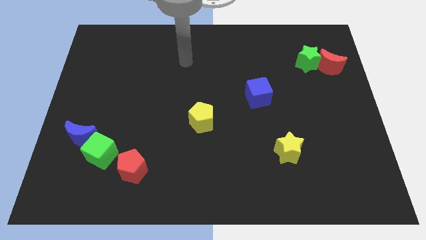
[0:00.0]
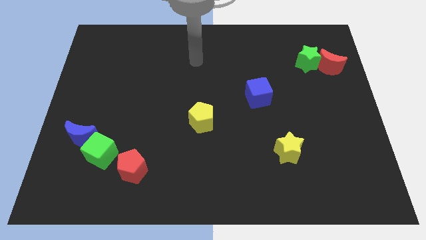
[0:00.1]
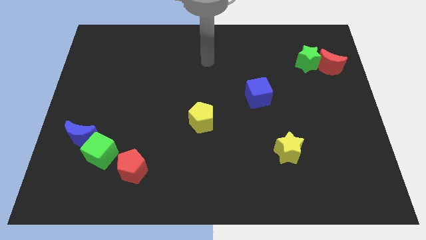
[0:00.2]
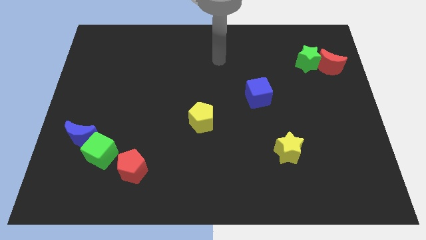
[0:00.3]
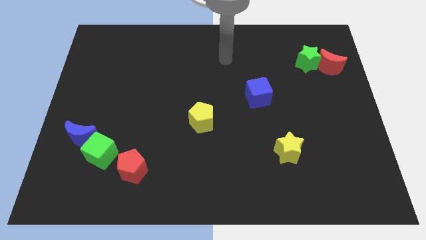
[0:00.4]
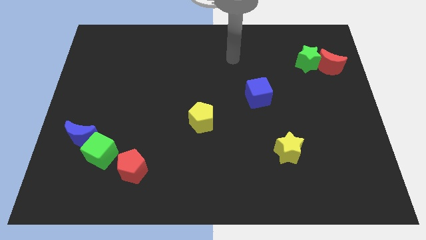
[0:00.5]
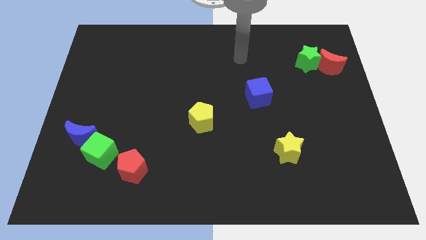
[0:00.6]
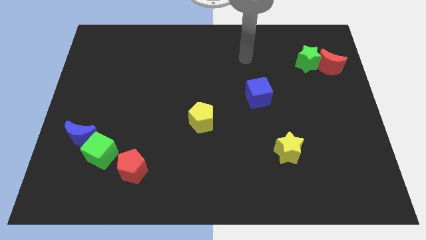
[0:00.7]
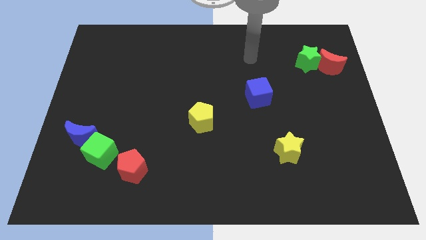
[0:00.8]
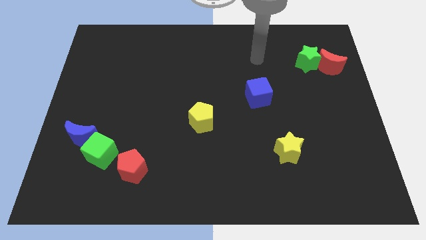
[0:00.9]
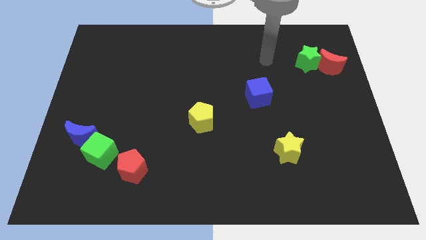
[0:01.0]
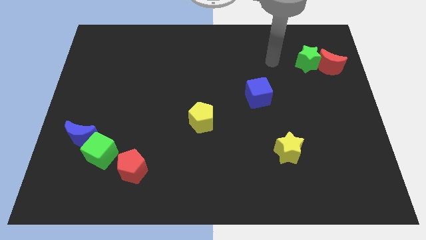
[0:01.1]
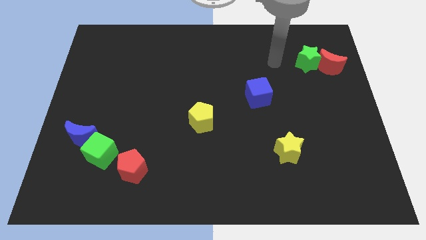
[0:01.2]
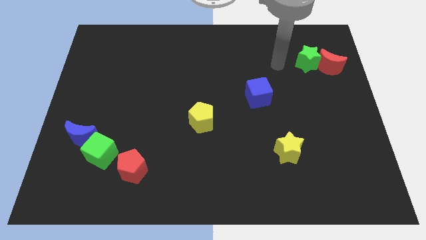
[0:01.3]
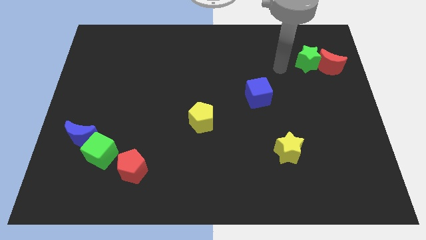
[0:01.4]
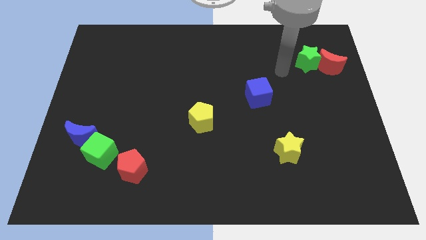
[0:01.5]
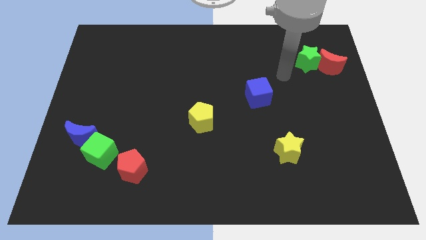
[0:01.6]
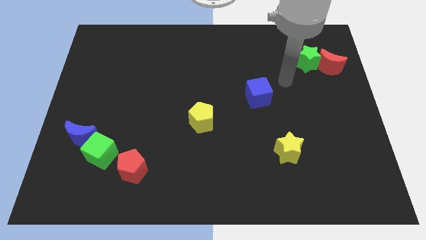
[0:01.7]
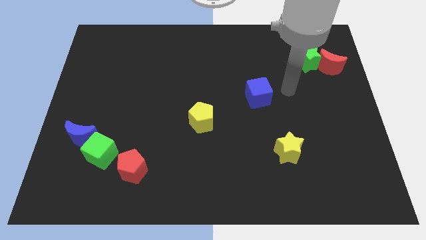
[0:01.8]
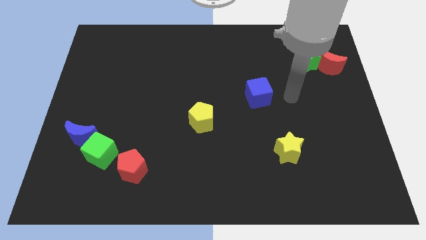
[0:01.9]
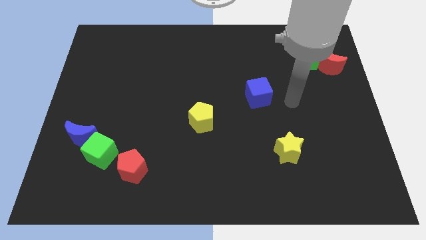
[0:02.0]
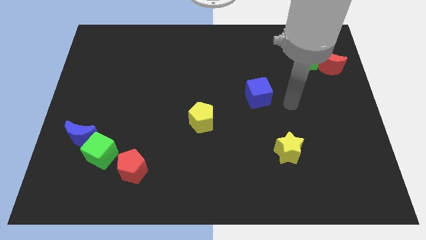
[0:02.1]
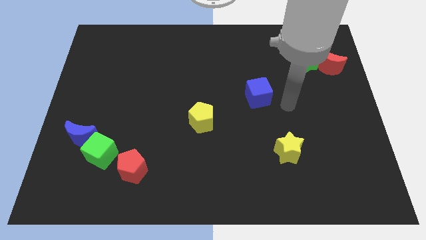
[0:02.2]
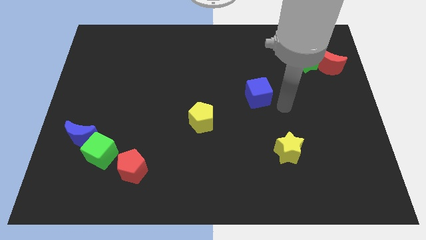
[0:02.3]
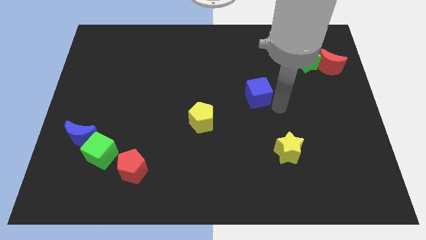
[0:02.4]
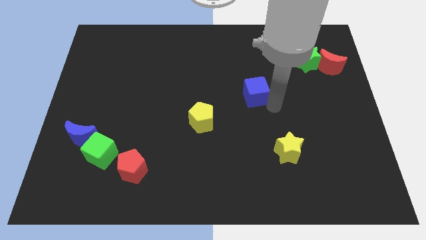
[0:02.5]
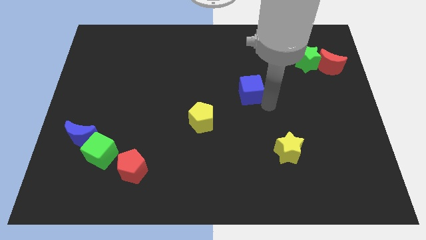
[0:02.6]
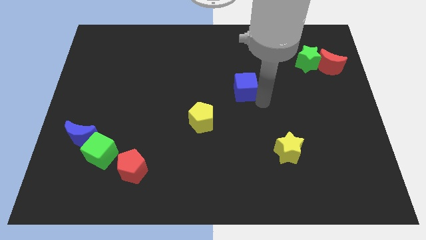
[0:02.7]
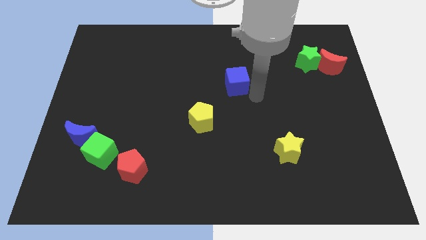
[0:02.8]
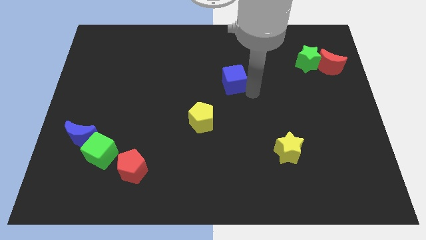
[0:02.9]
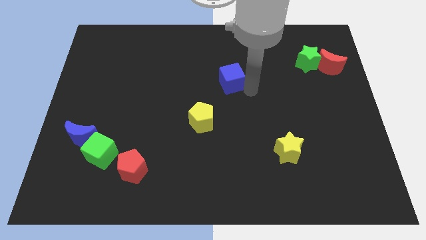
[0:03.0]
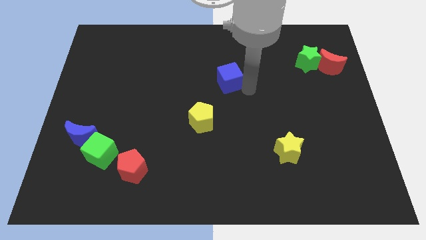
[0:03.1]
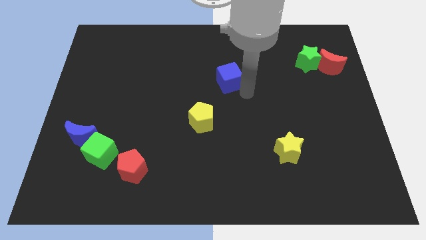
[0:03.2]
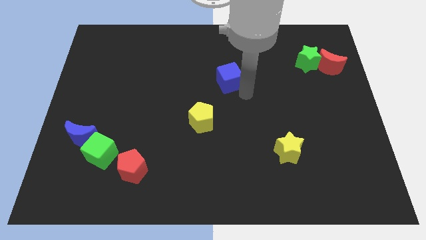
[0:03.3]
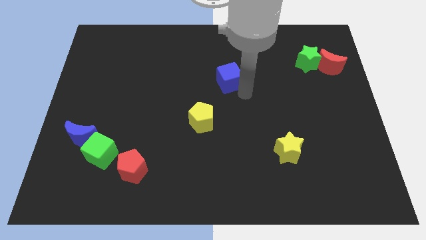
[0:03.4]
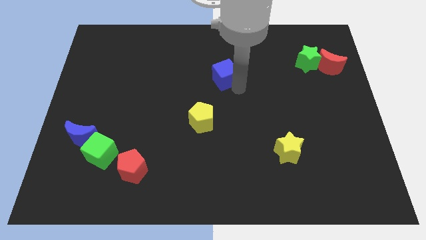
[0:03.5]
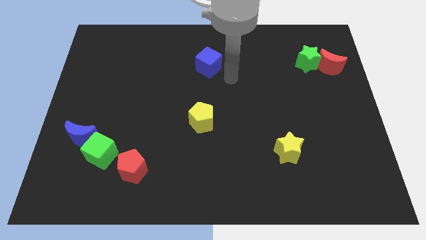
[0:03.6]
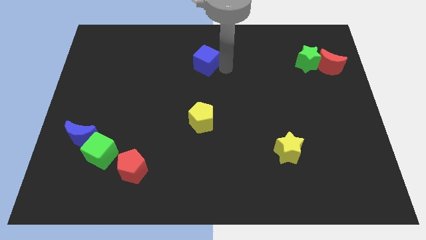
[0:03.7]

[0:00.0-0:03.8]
move your arm towards the blue cube on the top center of the board

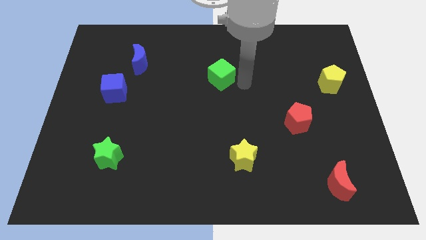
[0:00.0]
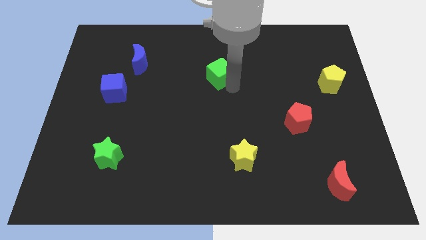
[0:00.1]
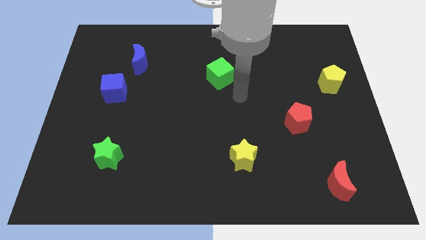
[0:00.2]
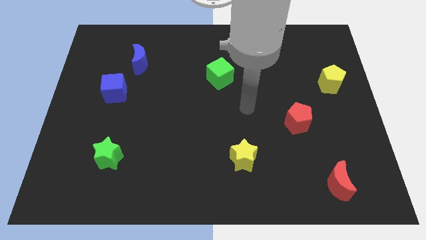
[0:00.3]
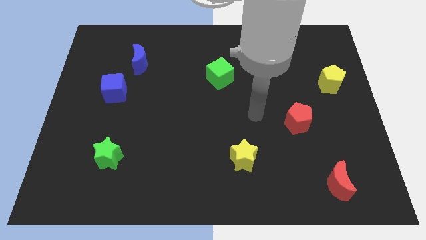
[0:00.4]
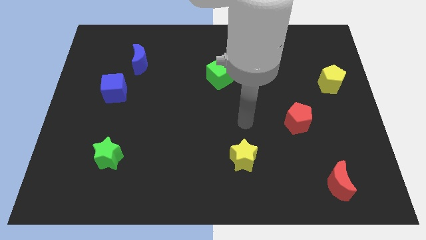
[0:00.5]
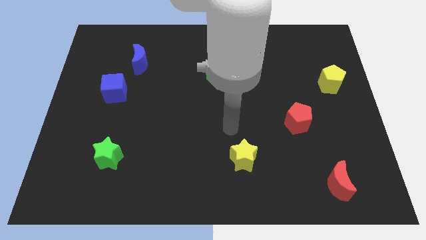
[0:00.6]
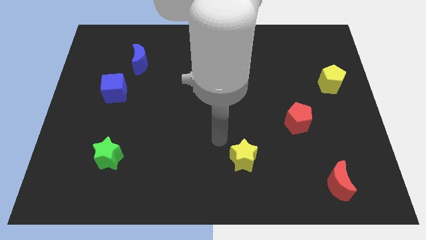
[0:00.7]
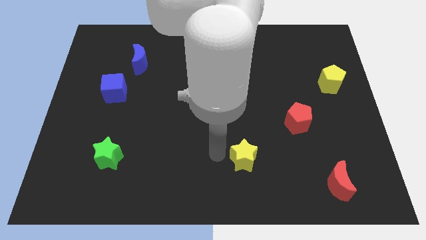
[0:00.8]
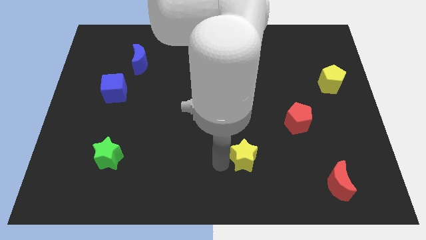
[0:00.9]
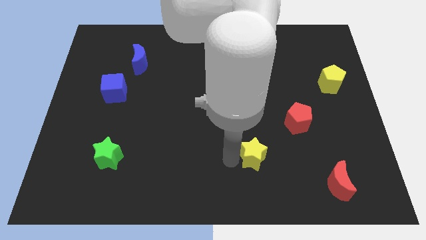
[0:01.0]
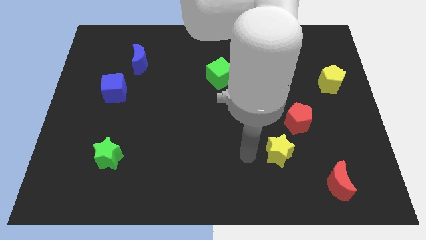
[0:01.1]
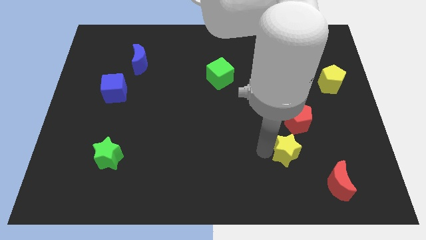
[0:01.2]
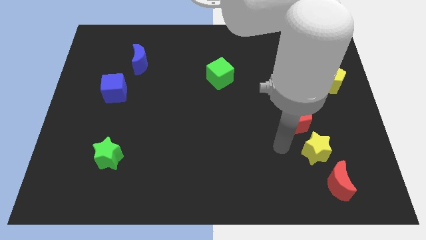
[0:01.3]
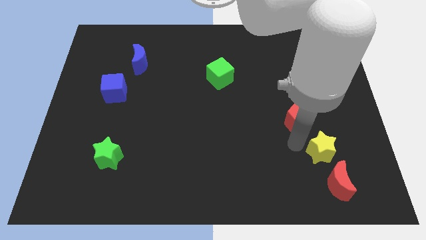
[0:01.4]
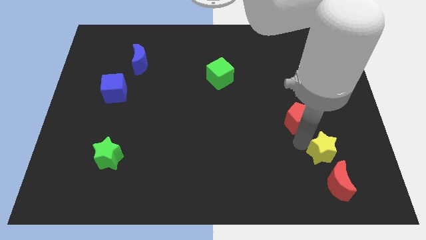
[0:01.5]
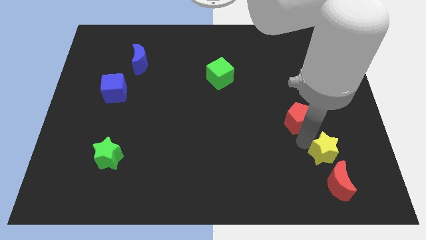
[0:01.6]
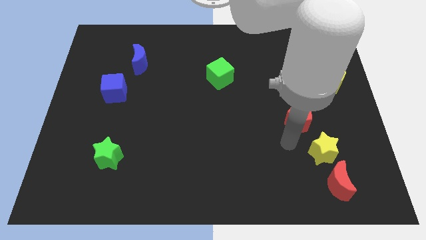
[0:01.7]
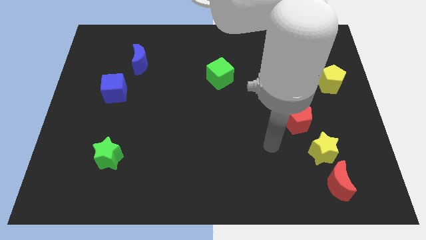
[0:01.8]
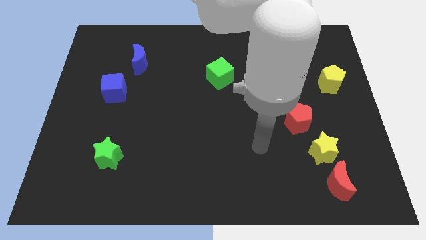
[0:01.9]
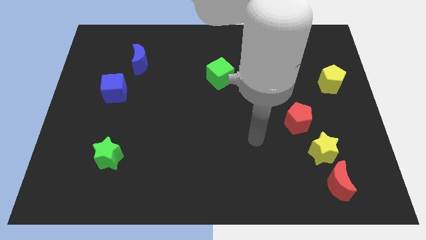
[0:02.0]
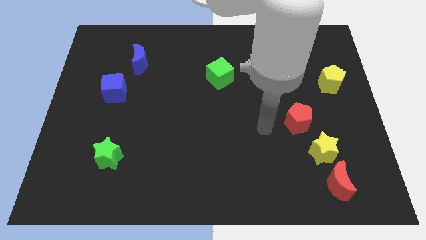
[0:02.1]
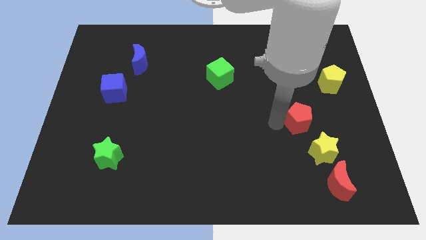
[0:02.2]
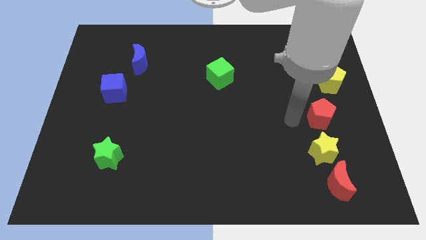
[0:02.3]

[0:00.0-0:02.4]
push the yellow star diagonal in between the two red blocks

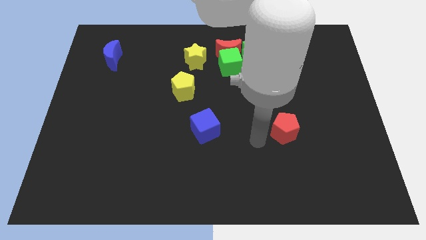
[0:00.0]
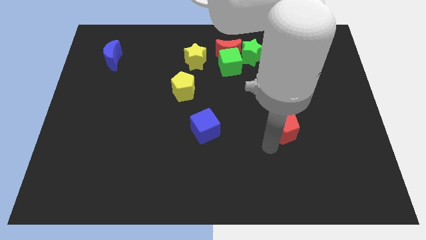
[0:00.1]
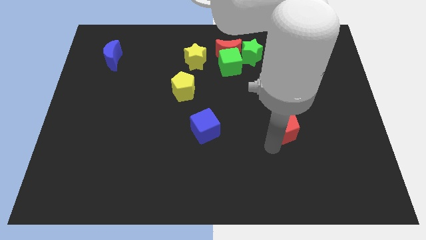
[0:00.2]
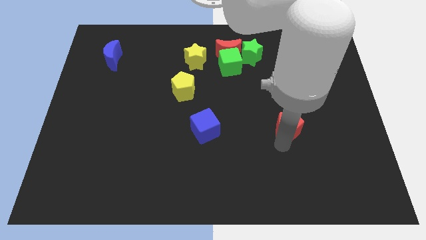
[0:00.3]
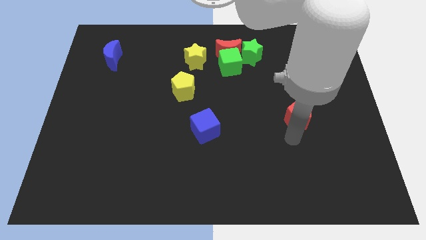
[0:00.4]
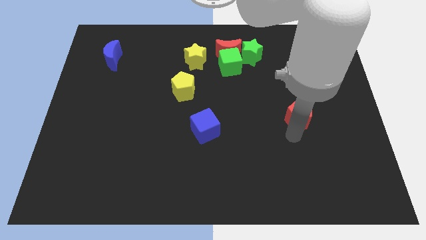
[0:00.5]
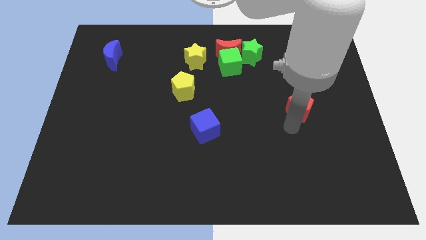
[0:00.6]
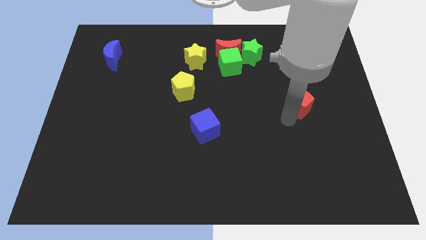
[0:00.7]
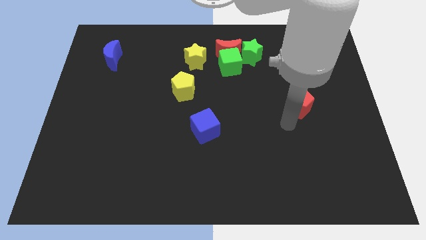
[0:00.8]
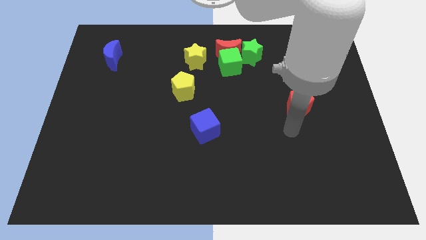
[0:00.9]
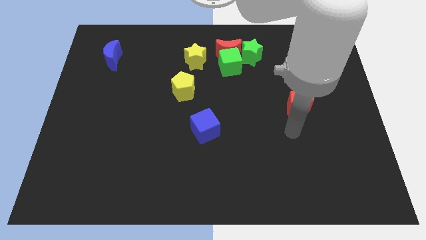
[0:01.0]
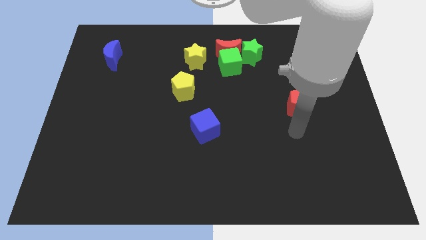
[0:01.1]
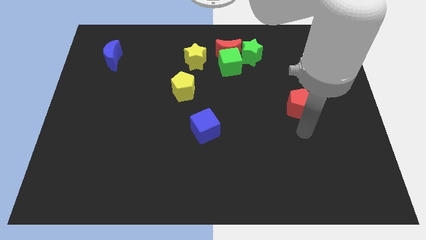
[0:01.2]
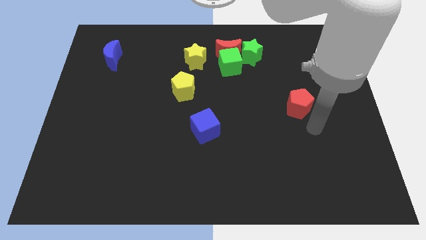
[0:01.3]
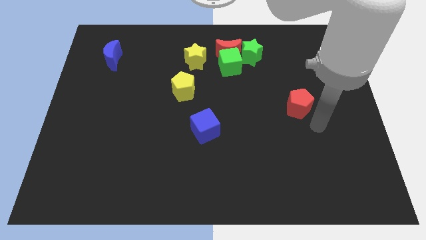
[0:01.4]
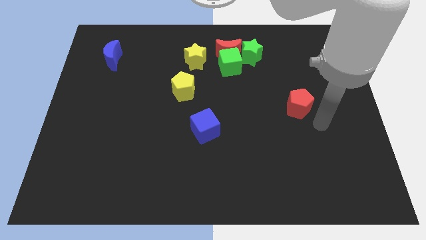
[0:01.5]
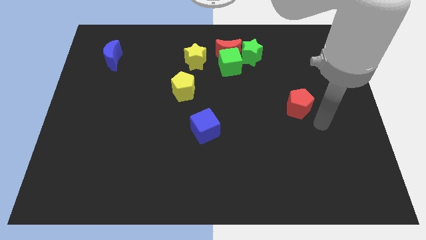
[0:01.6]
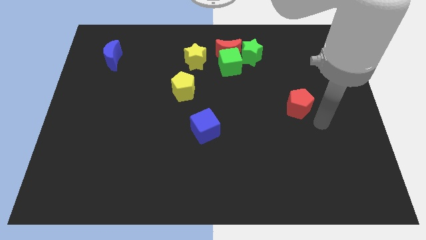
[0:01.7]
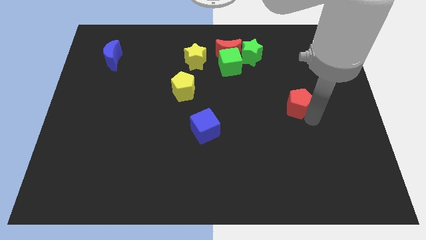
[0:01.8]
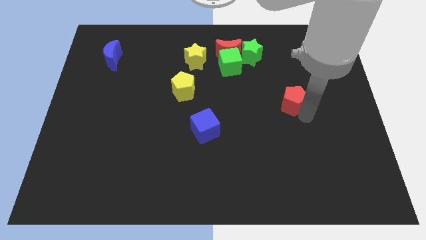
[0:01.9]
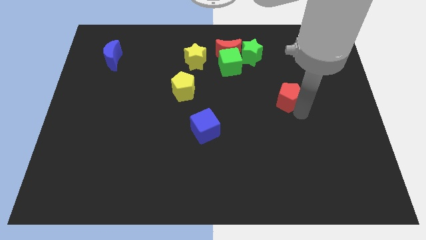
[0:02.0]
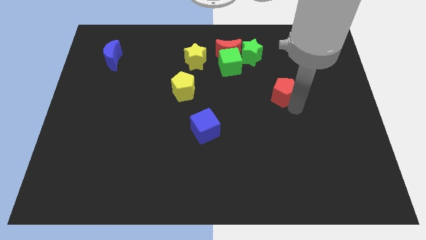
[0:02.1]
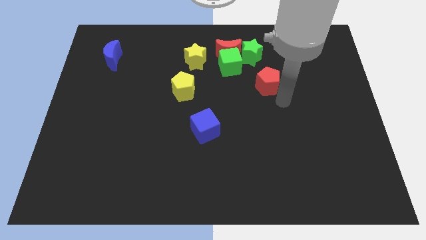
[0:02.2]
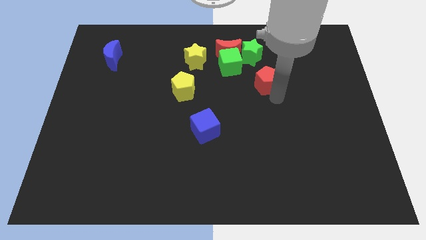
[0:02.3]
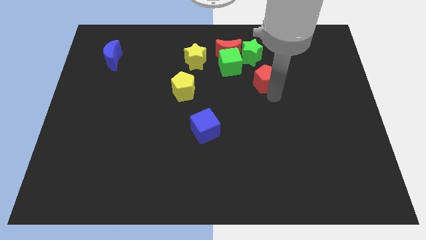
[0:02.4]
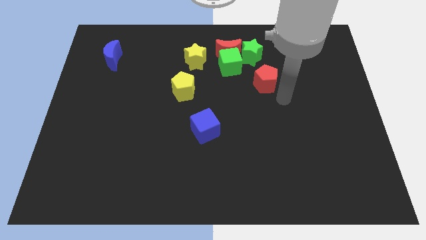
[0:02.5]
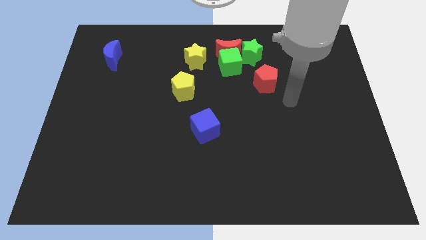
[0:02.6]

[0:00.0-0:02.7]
push the red pentagon below the green star

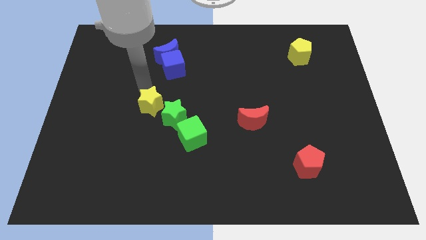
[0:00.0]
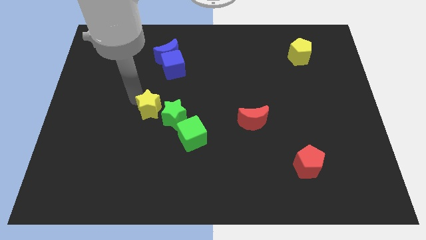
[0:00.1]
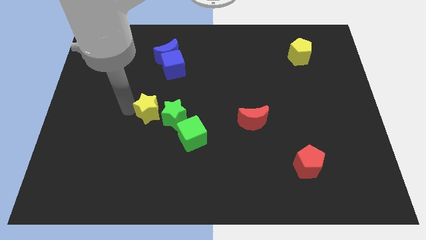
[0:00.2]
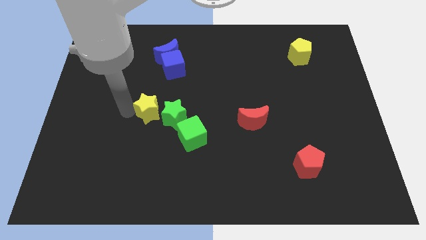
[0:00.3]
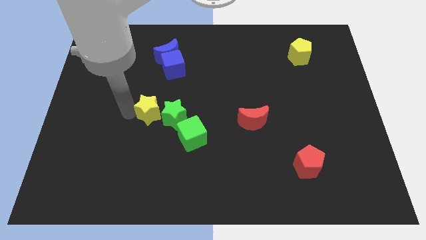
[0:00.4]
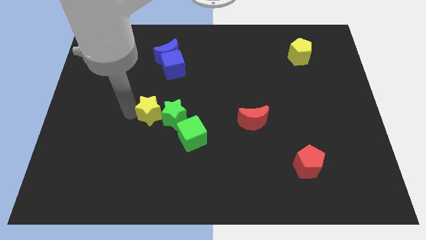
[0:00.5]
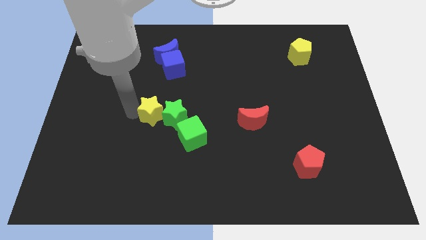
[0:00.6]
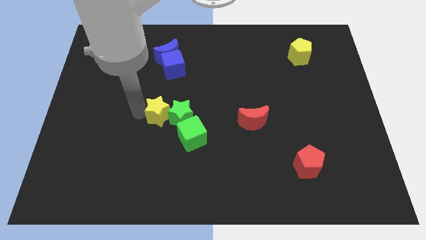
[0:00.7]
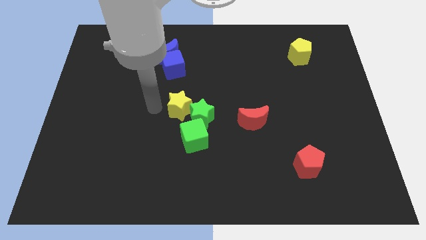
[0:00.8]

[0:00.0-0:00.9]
move the yellow star into the green star
